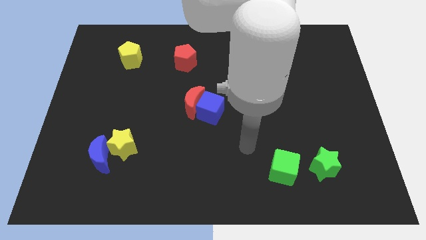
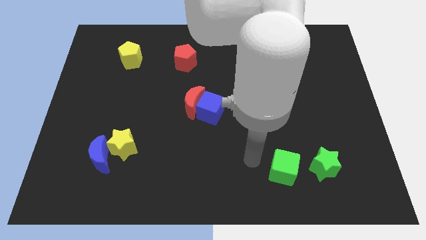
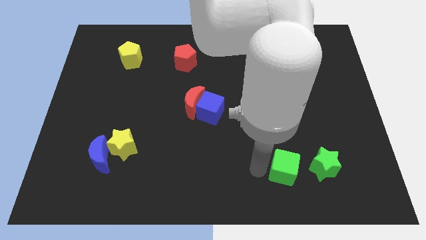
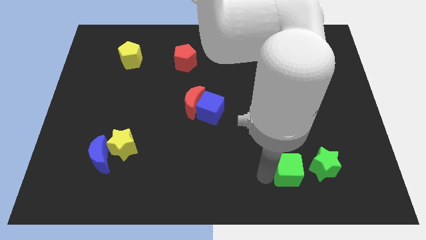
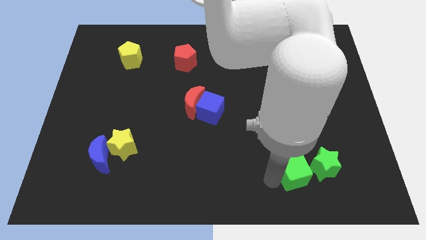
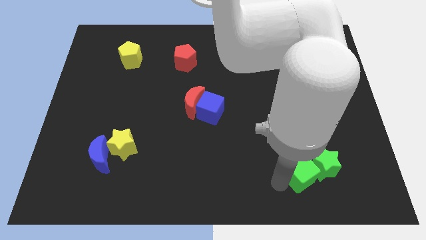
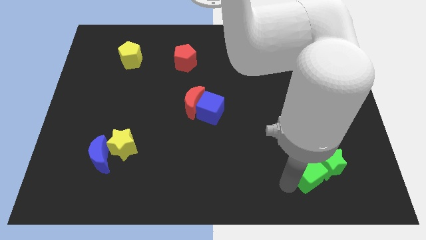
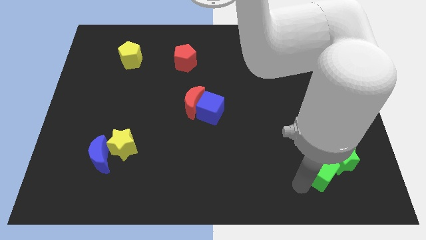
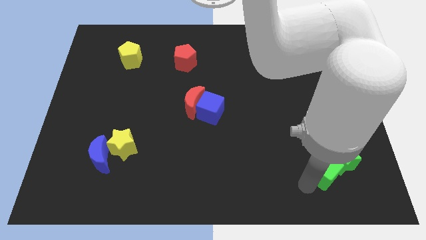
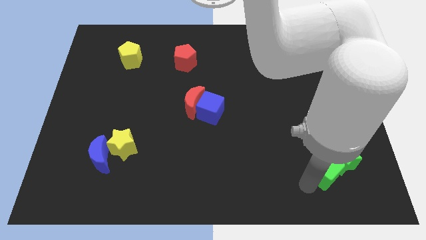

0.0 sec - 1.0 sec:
push the green cube into the green star

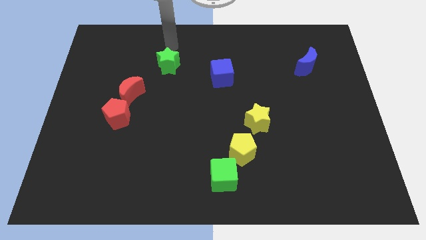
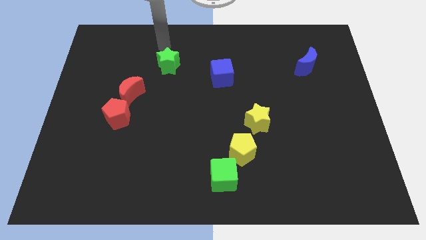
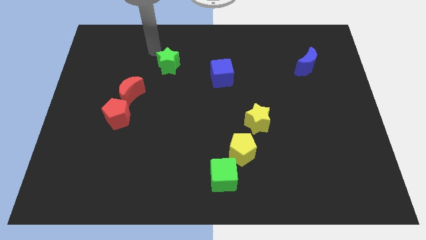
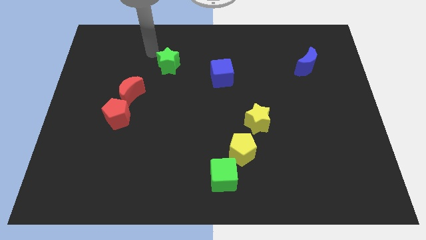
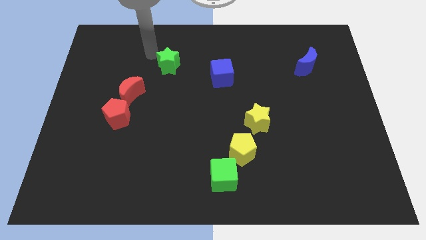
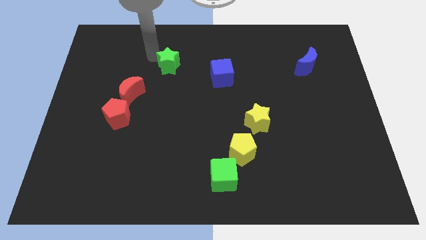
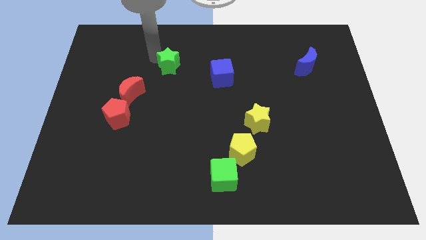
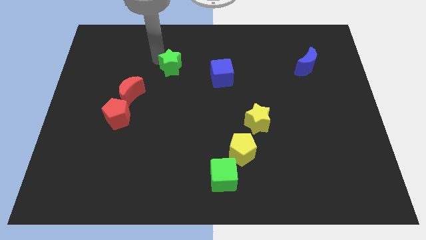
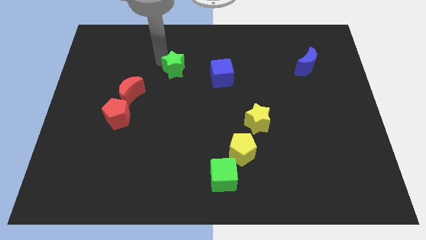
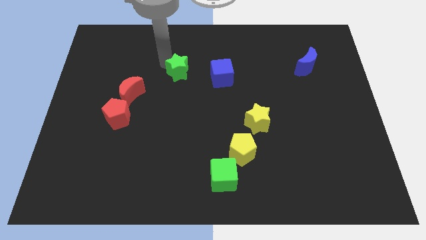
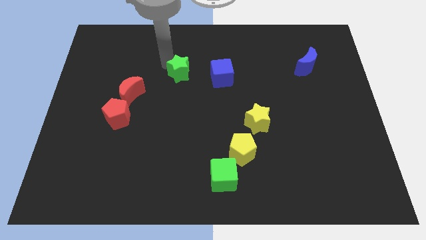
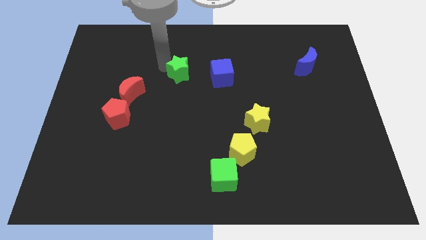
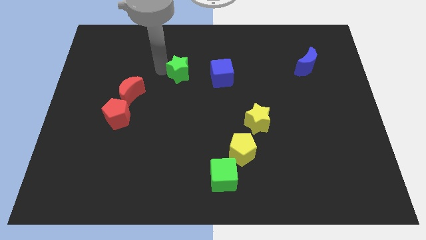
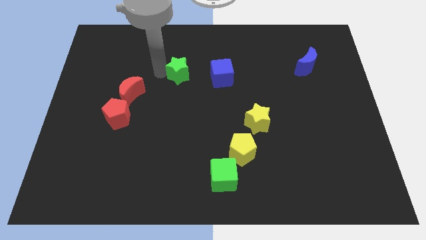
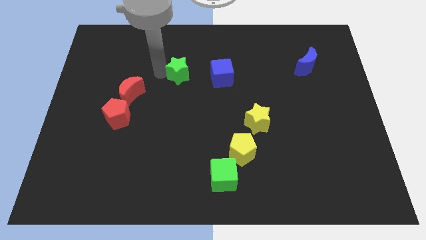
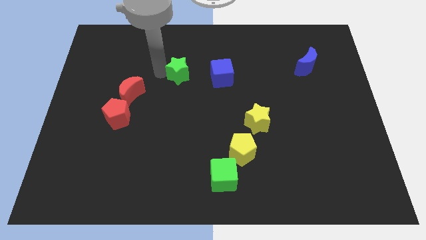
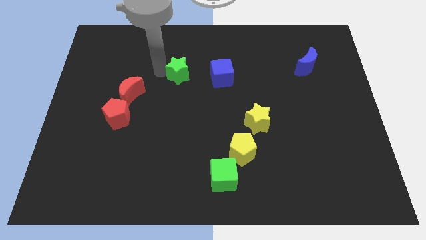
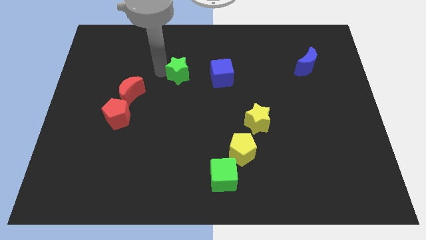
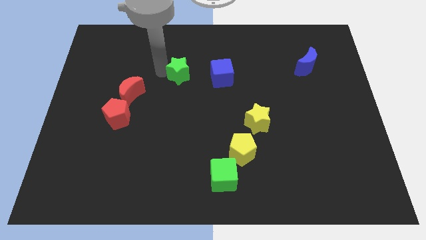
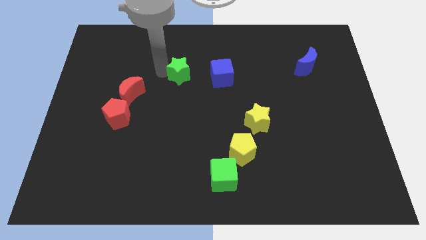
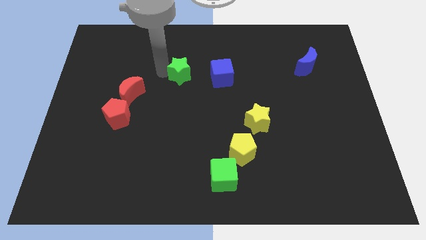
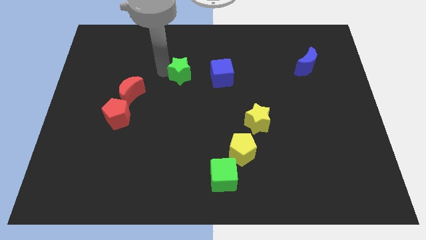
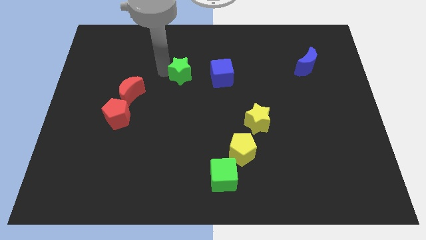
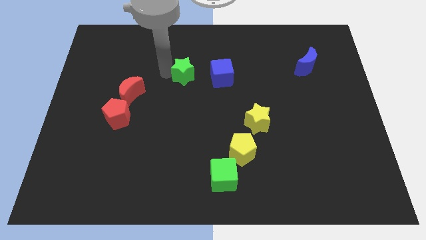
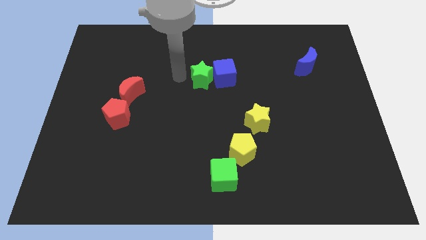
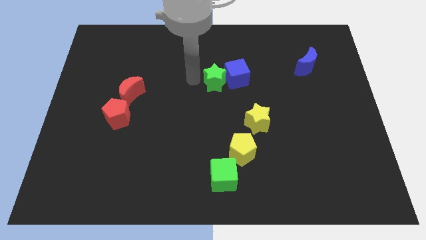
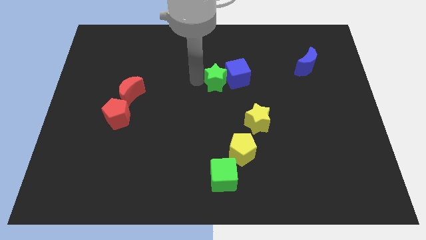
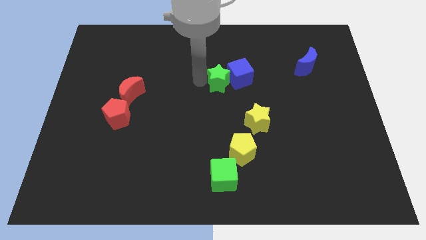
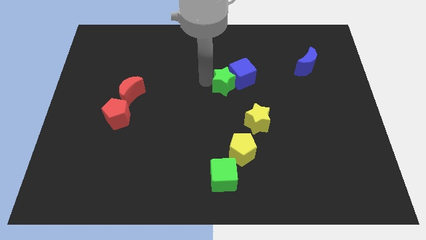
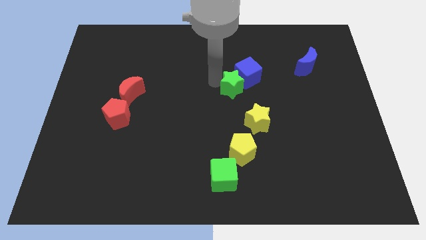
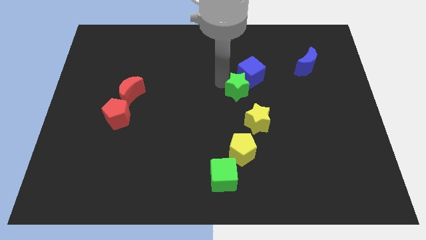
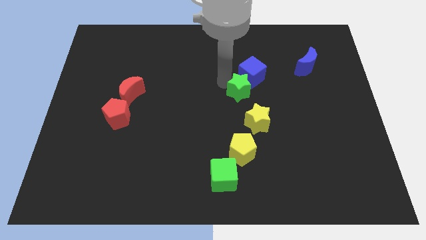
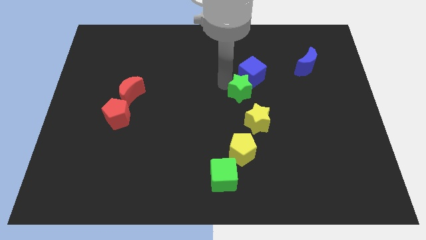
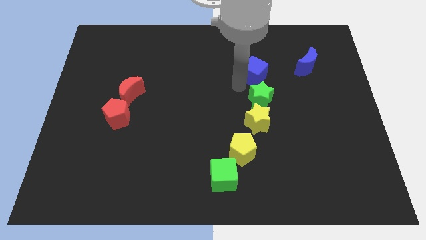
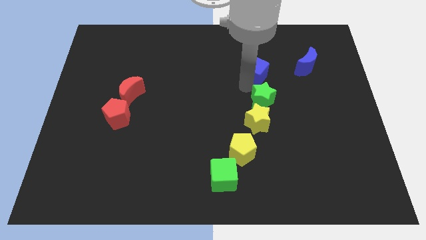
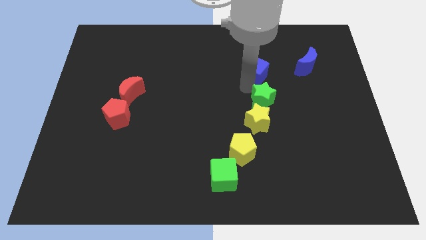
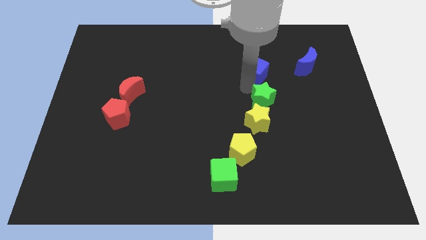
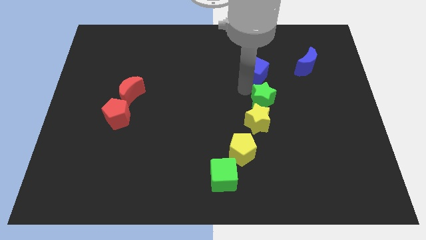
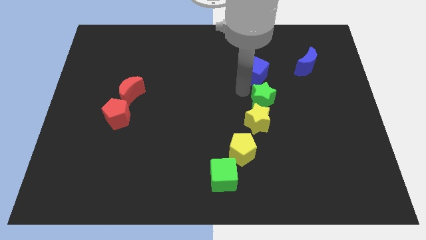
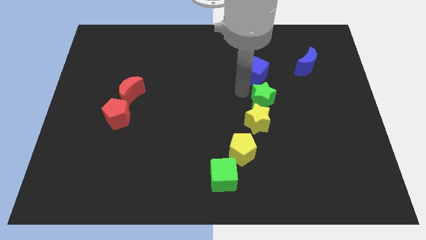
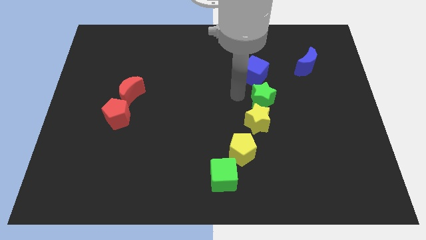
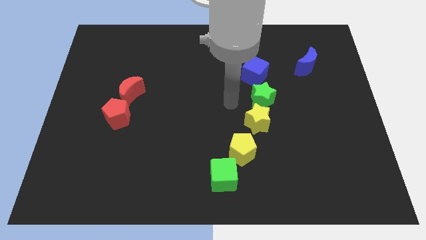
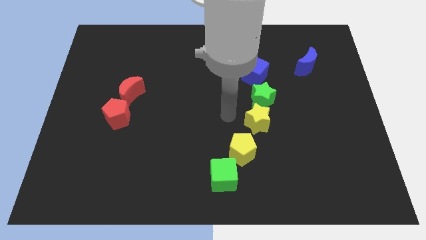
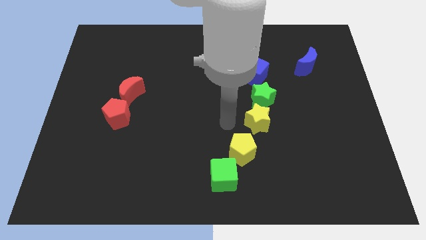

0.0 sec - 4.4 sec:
drag the blue cube and green star diagonally on the bottom left side of the blue crescent

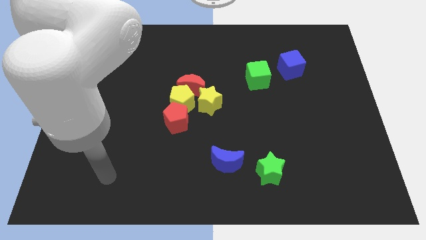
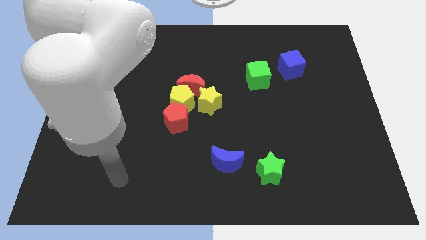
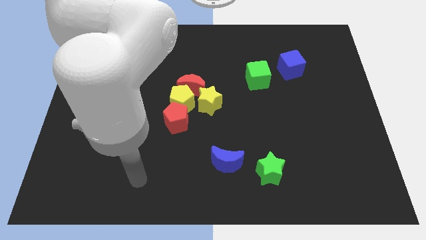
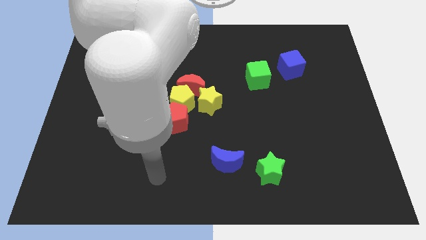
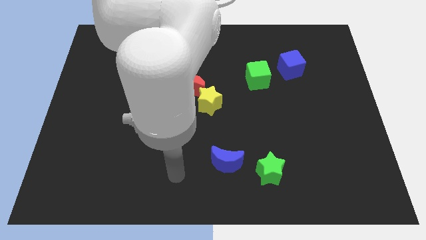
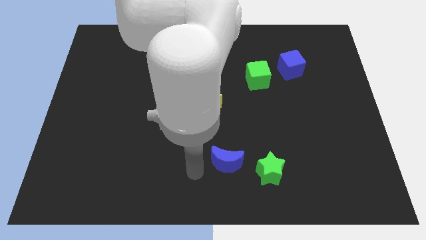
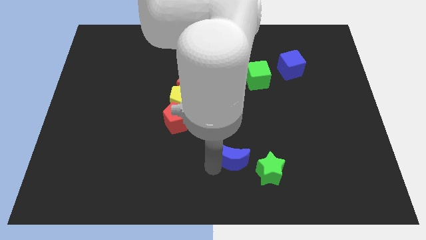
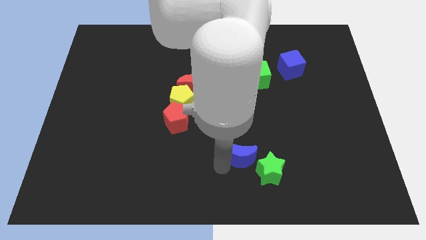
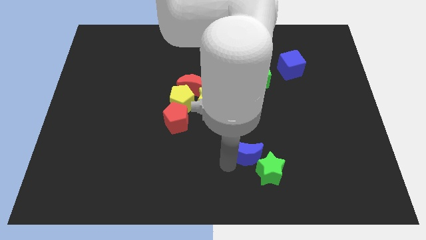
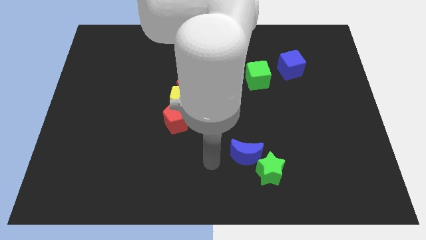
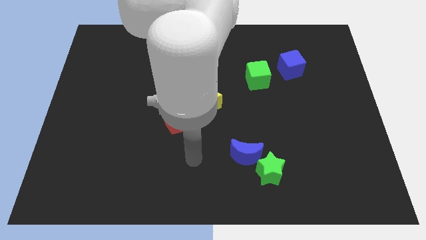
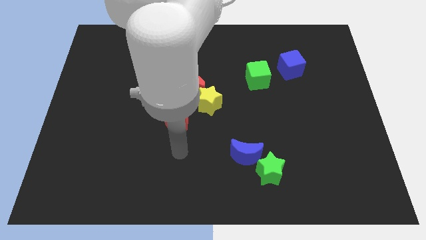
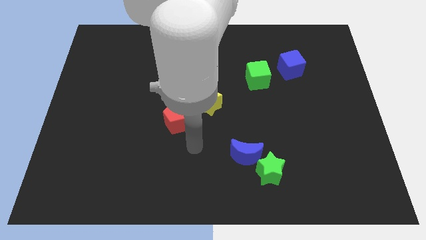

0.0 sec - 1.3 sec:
push the blue crescent to the top left of the green star

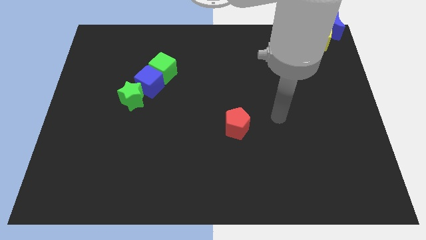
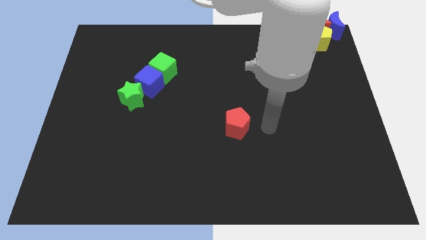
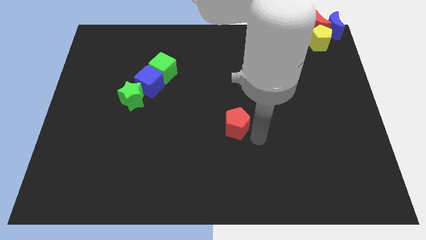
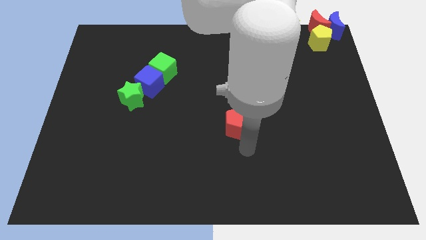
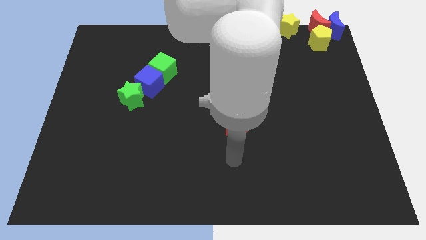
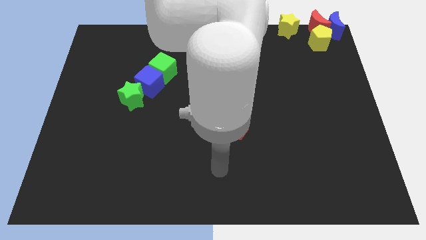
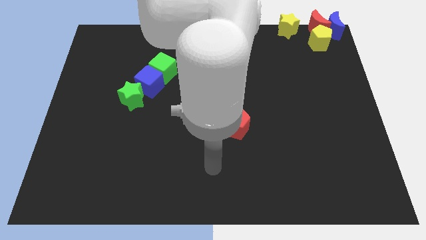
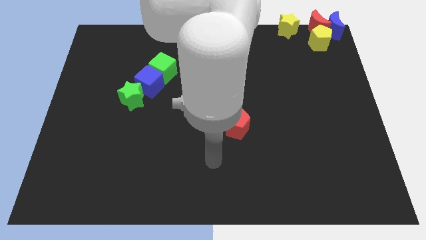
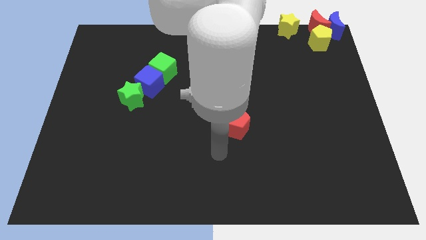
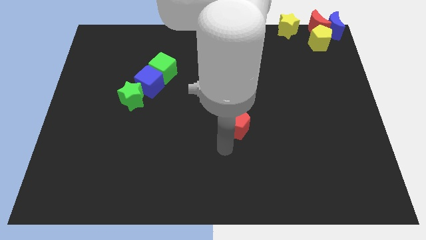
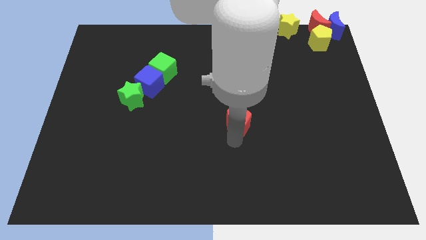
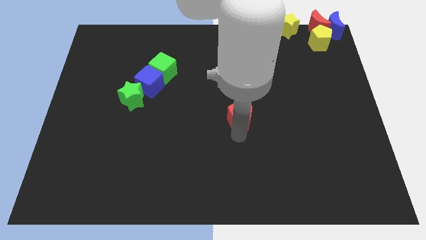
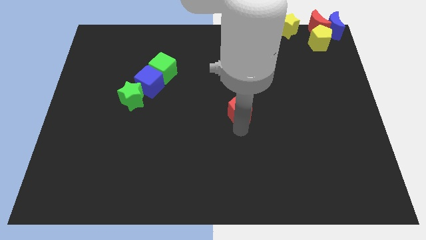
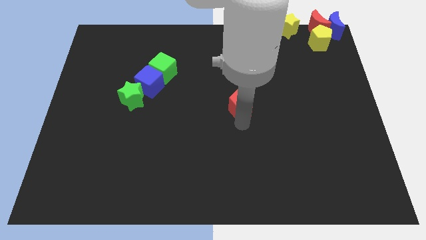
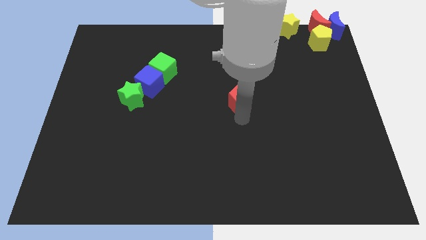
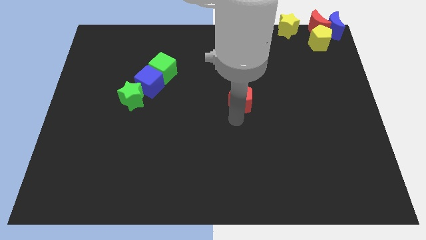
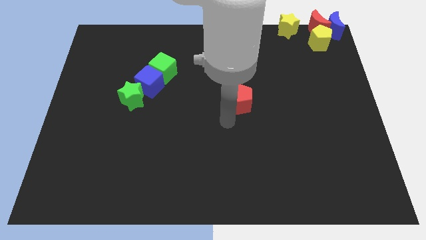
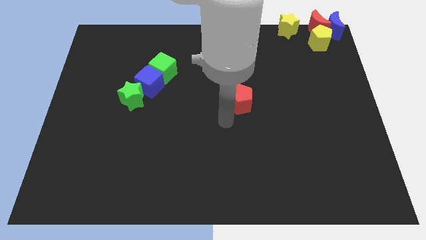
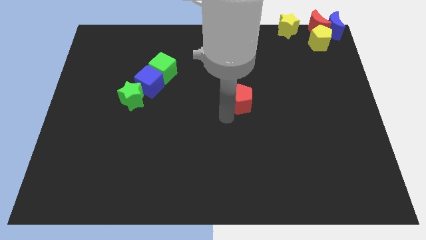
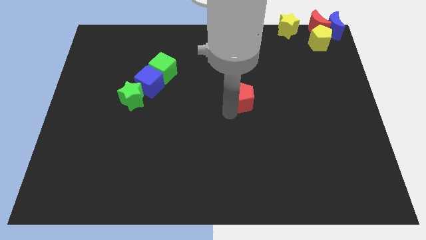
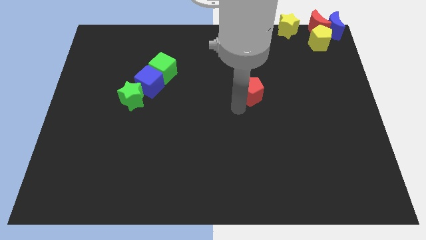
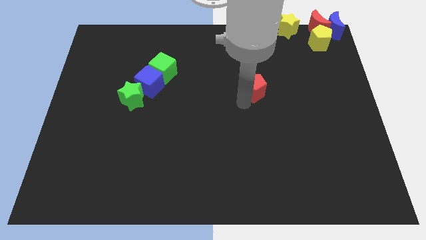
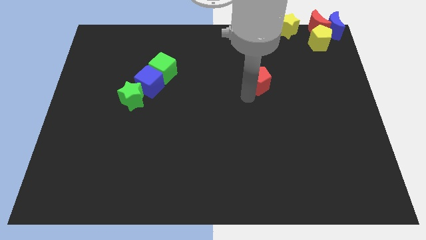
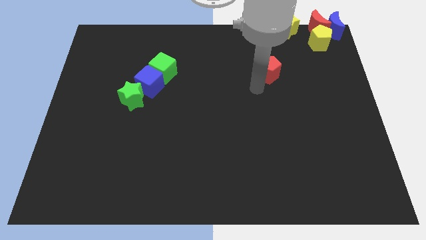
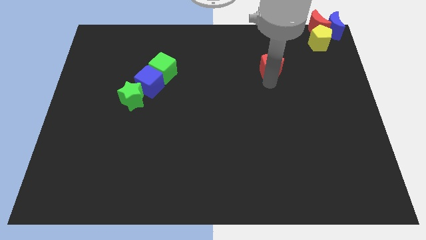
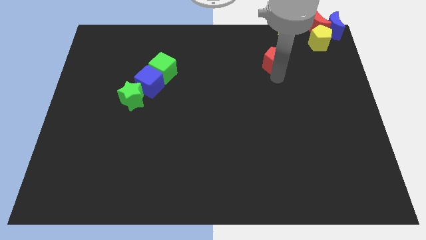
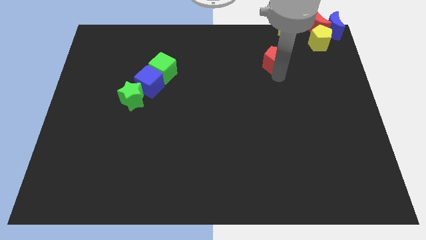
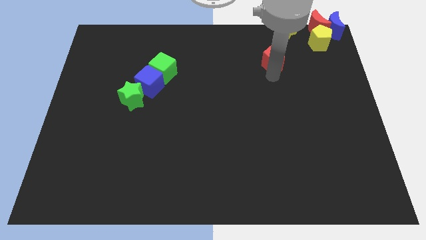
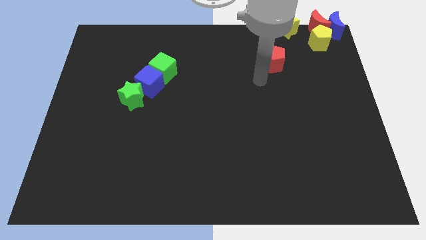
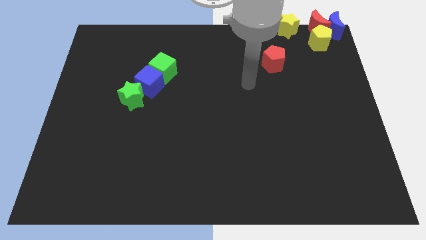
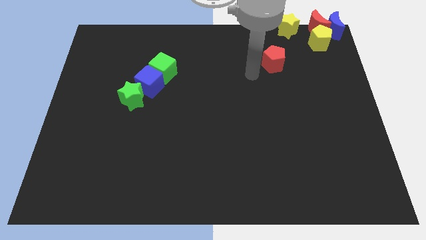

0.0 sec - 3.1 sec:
move the red pentagon at the bottom left of the yellow pentagon
